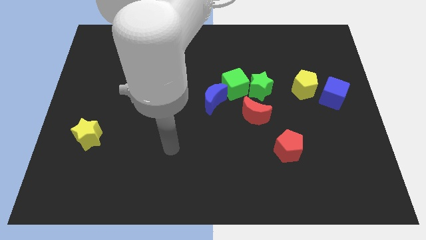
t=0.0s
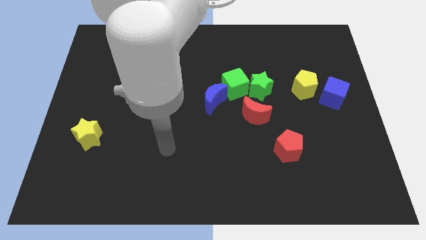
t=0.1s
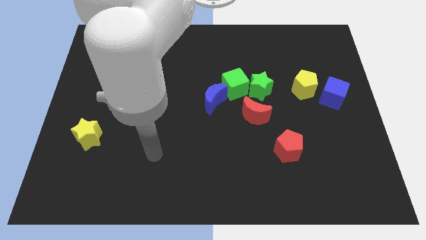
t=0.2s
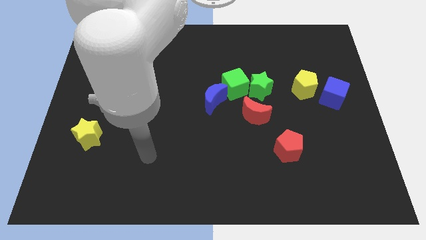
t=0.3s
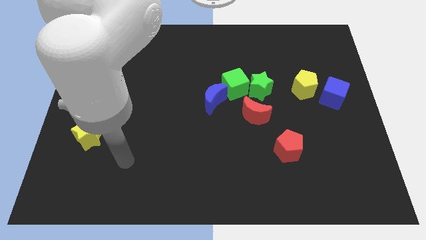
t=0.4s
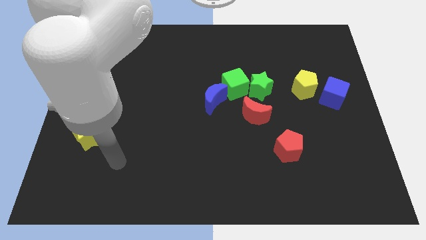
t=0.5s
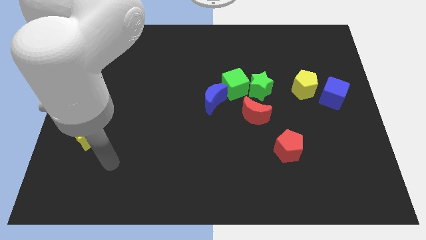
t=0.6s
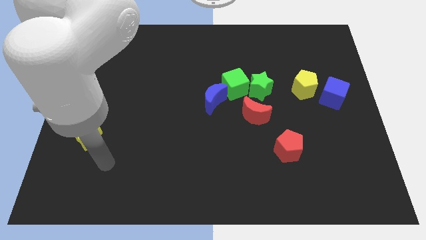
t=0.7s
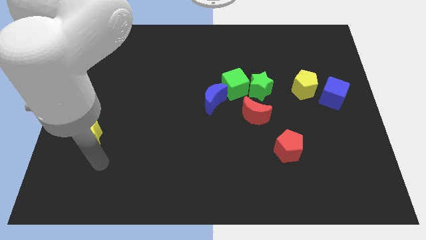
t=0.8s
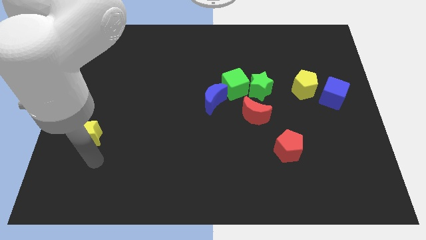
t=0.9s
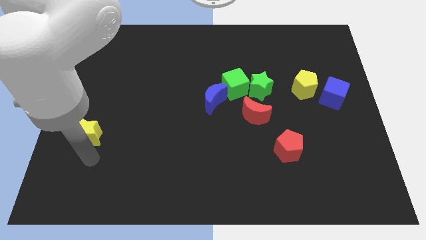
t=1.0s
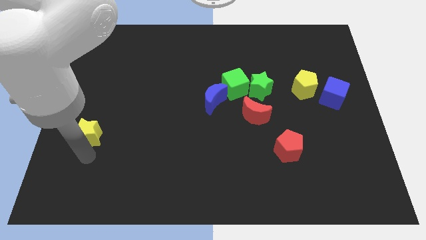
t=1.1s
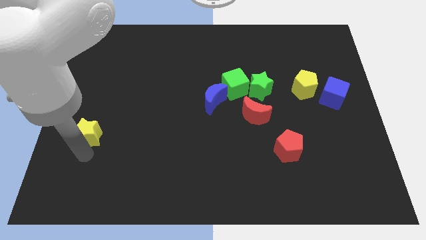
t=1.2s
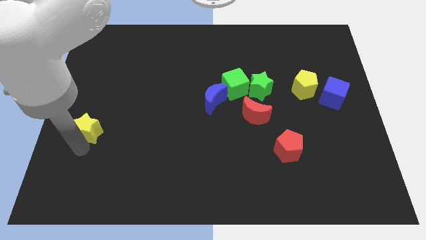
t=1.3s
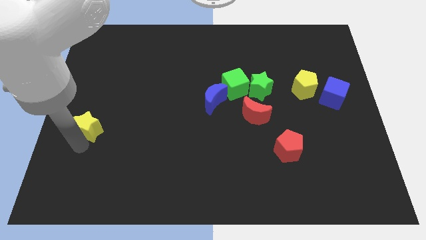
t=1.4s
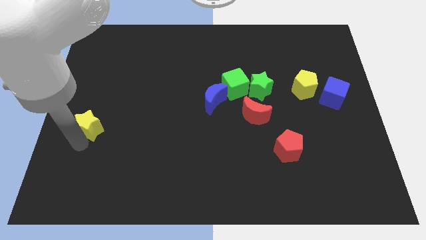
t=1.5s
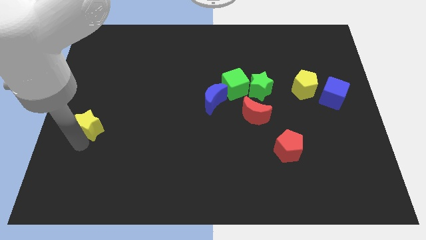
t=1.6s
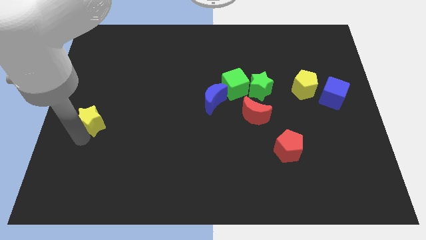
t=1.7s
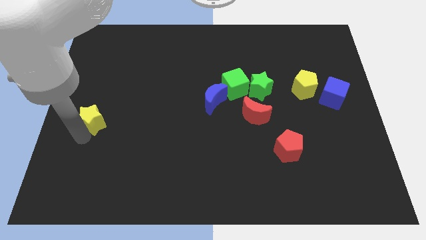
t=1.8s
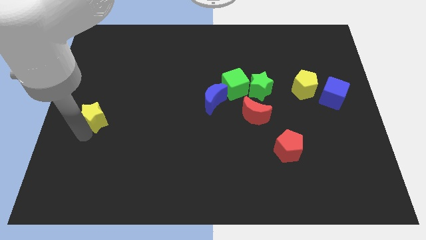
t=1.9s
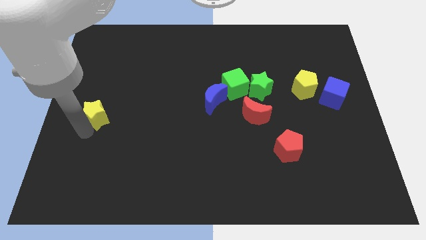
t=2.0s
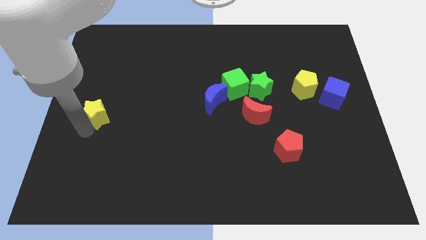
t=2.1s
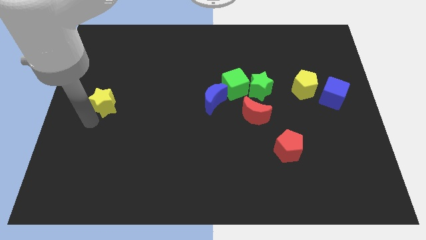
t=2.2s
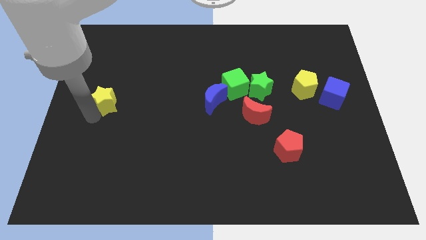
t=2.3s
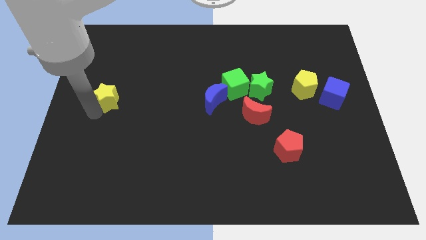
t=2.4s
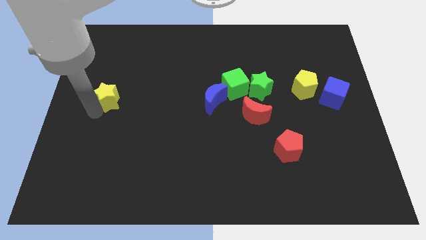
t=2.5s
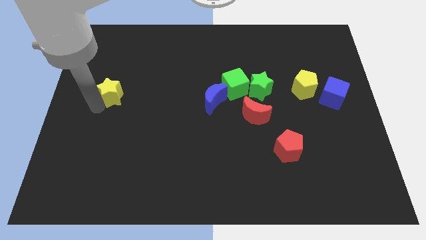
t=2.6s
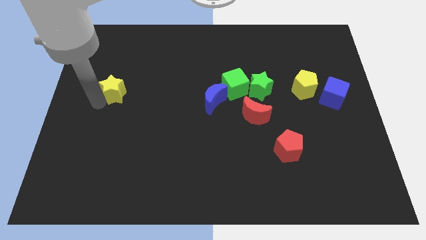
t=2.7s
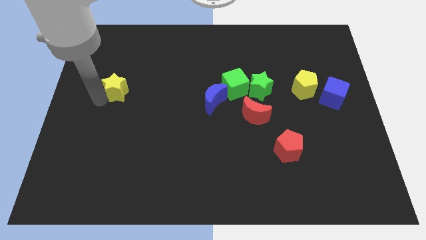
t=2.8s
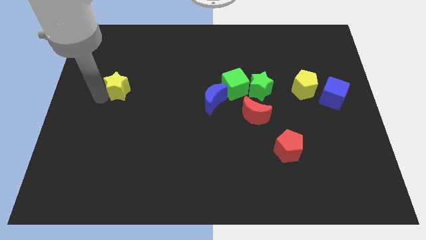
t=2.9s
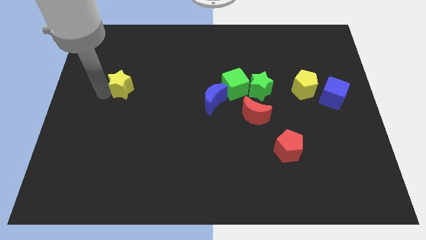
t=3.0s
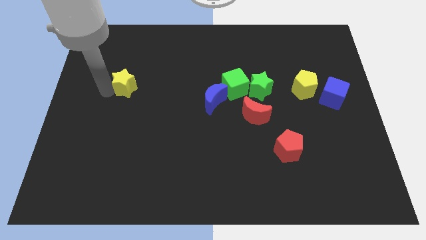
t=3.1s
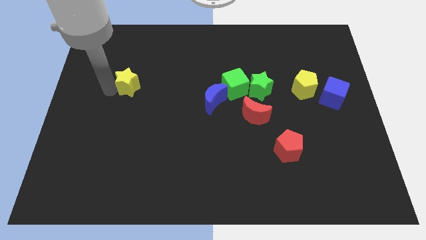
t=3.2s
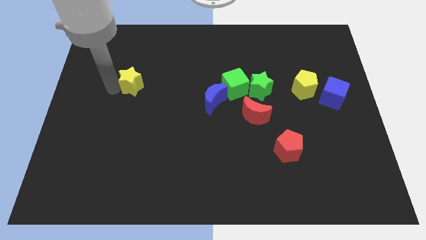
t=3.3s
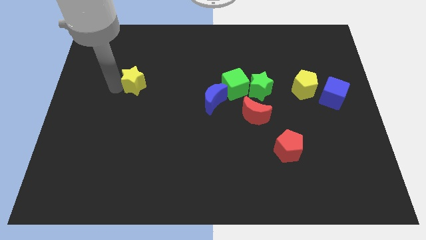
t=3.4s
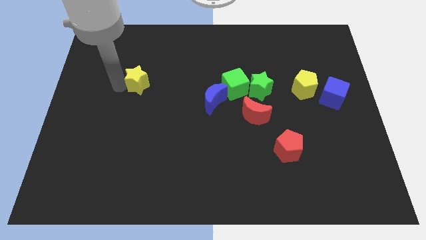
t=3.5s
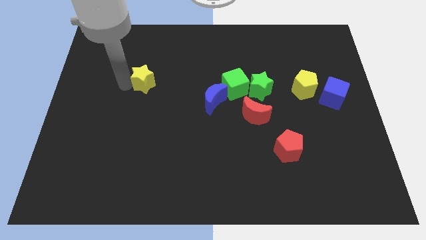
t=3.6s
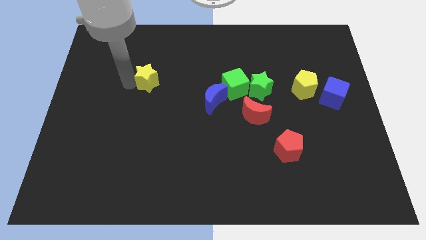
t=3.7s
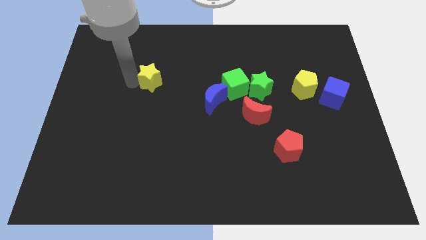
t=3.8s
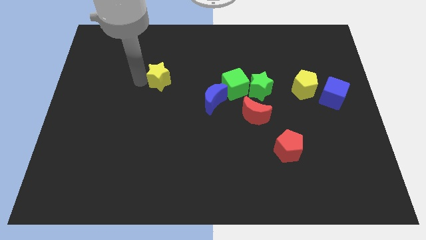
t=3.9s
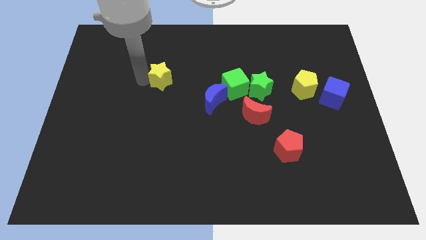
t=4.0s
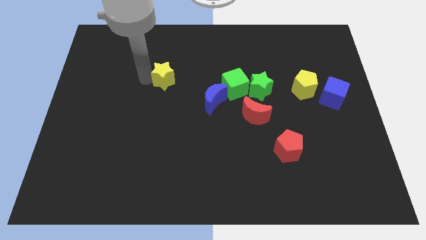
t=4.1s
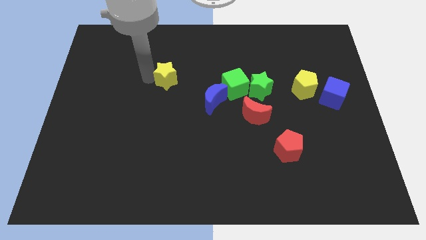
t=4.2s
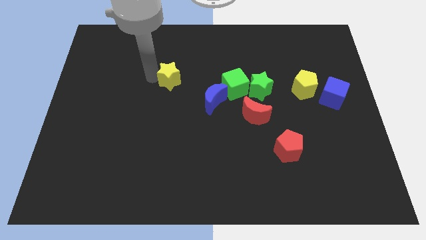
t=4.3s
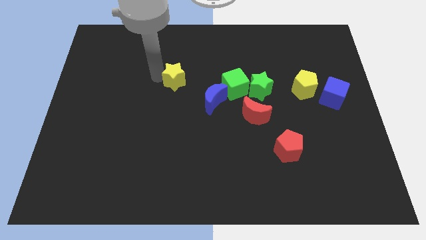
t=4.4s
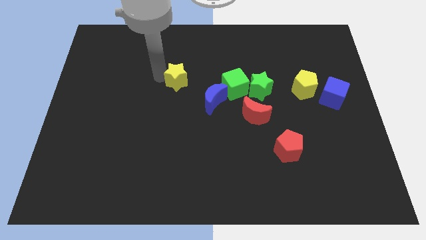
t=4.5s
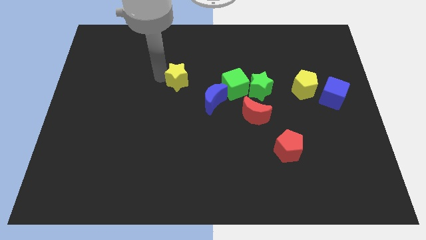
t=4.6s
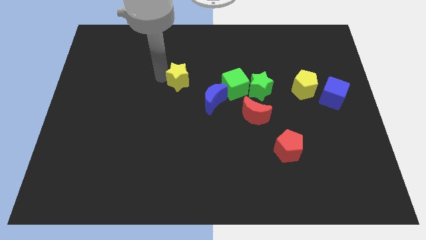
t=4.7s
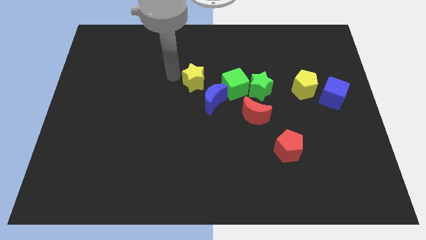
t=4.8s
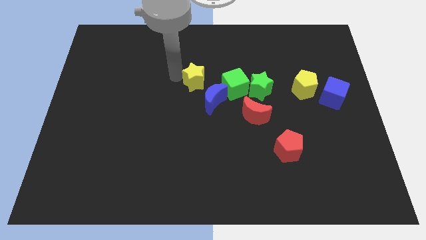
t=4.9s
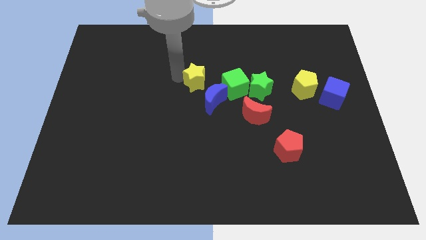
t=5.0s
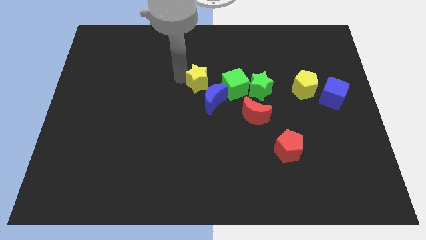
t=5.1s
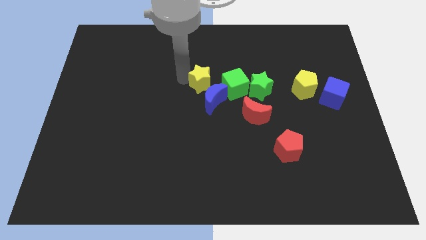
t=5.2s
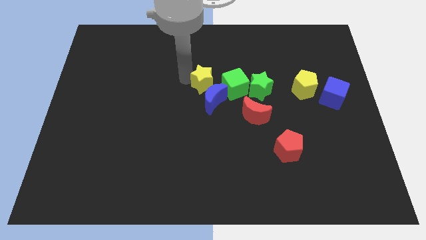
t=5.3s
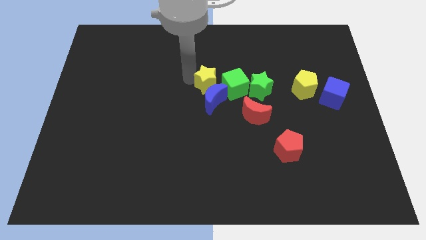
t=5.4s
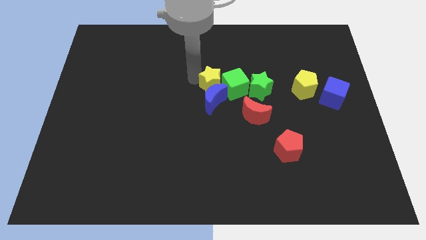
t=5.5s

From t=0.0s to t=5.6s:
slide the yellow star to the green cube

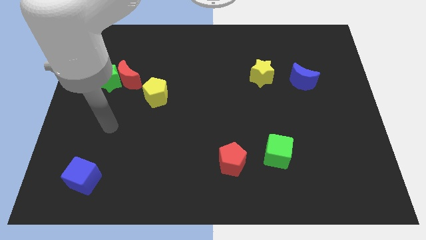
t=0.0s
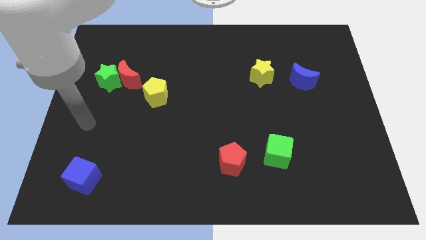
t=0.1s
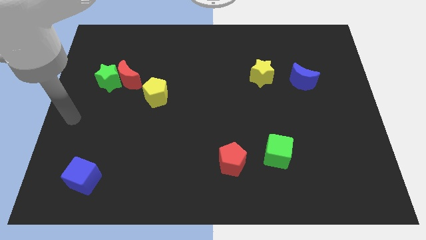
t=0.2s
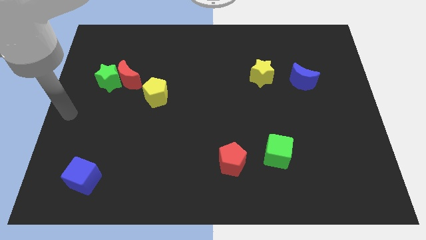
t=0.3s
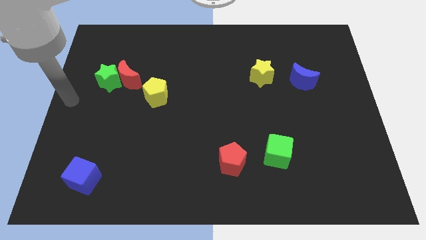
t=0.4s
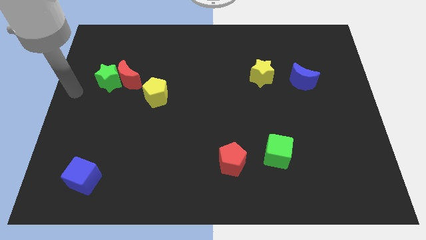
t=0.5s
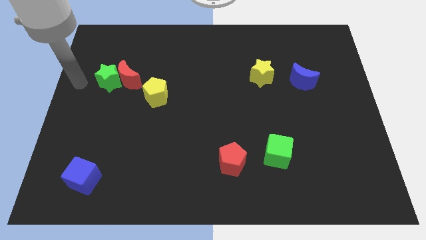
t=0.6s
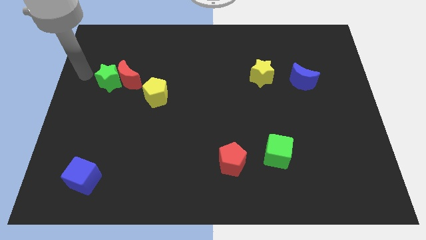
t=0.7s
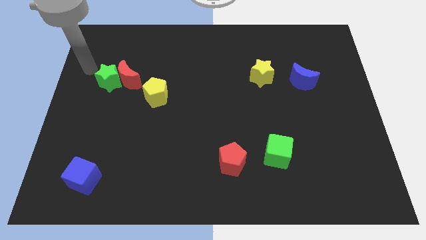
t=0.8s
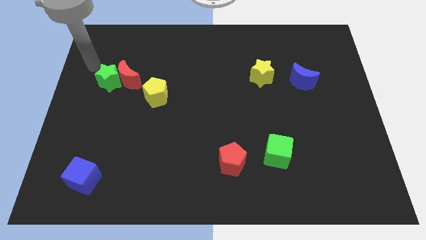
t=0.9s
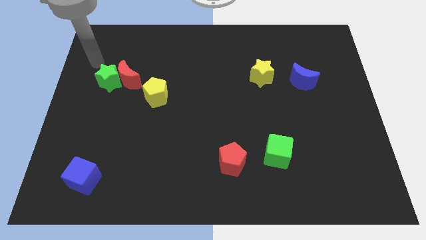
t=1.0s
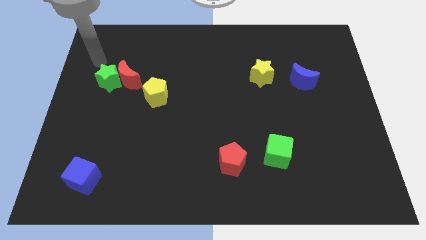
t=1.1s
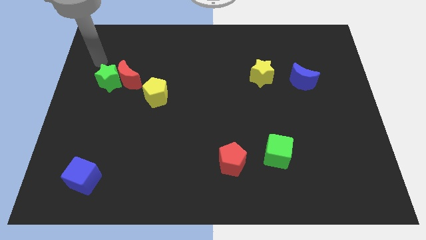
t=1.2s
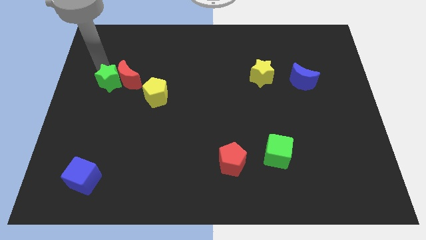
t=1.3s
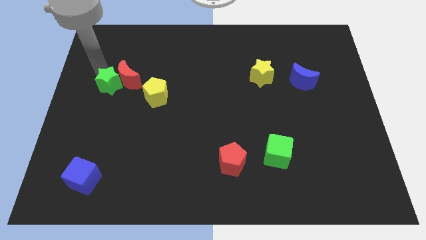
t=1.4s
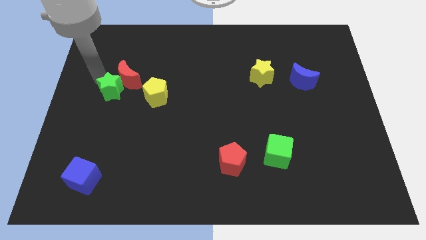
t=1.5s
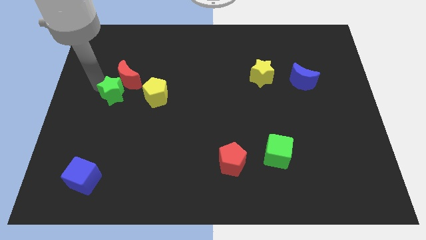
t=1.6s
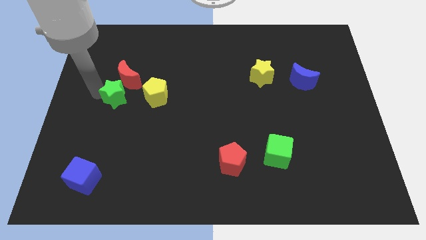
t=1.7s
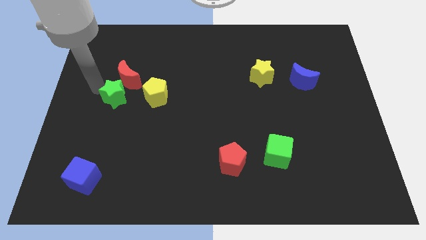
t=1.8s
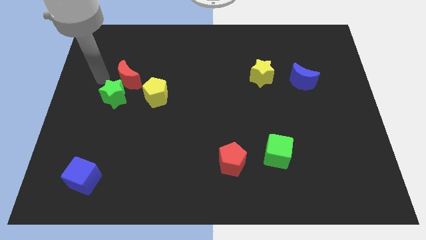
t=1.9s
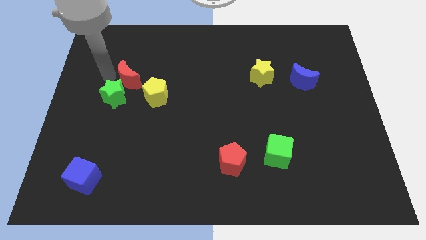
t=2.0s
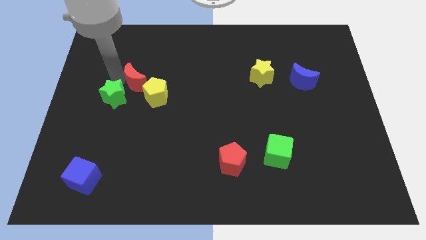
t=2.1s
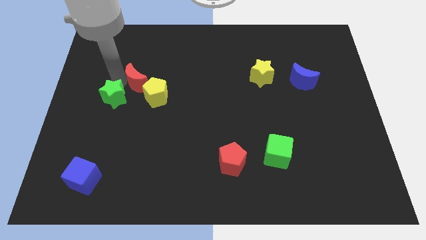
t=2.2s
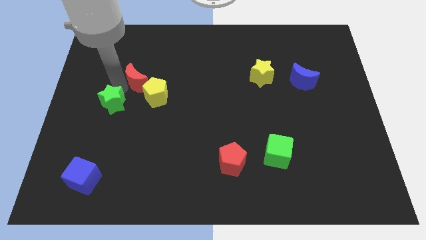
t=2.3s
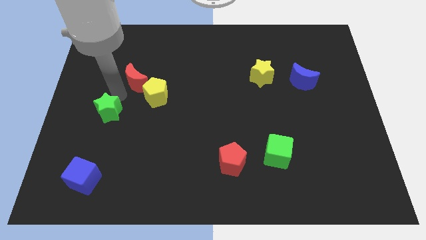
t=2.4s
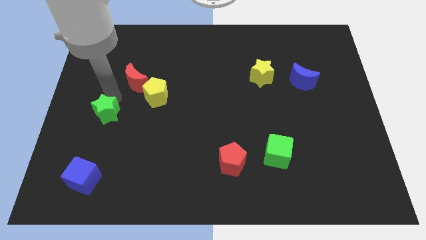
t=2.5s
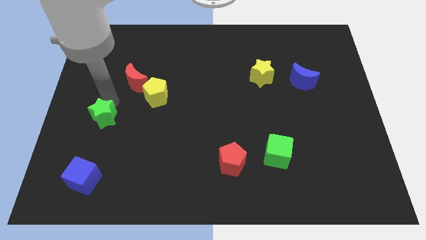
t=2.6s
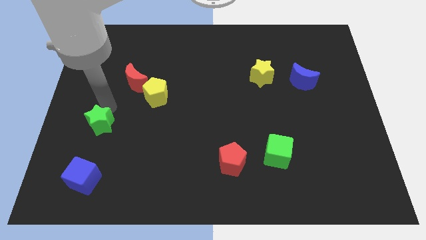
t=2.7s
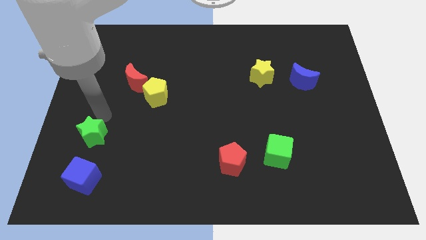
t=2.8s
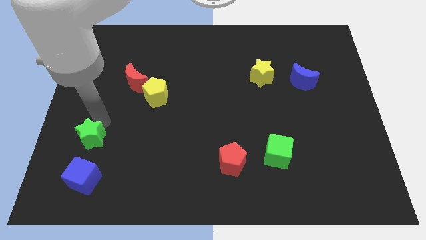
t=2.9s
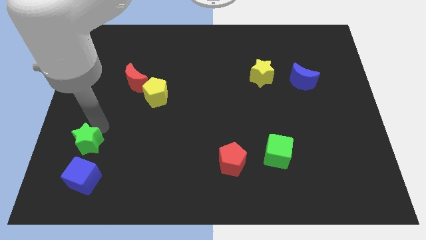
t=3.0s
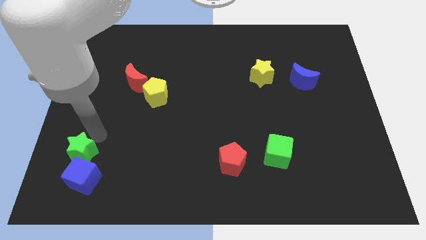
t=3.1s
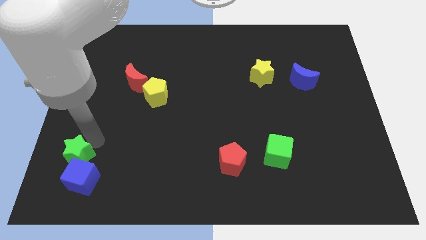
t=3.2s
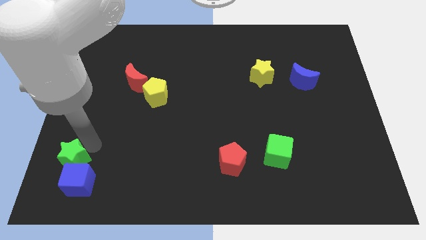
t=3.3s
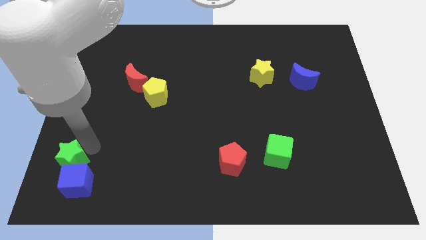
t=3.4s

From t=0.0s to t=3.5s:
move the green star towards the blue cube
